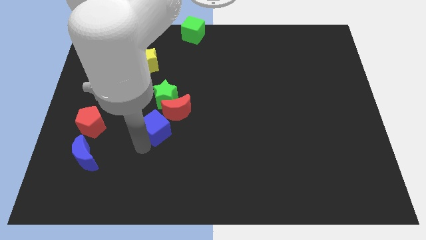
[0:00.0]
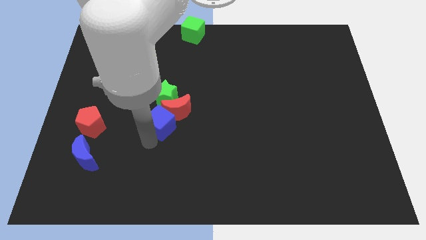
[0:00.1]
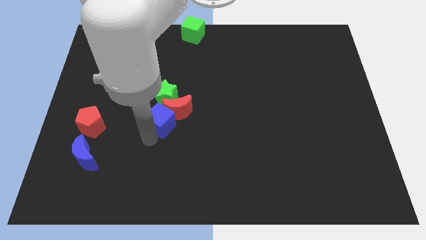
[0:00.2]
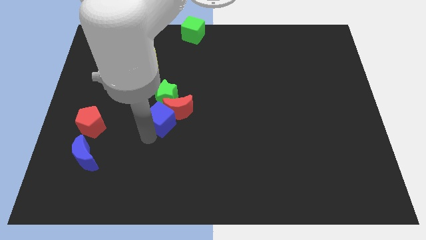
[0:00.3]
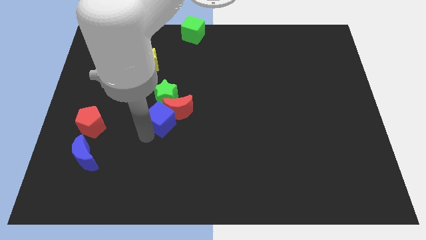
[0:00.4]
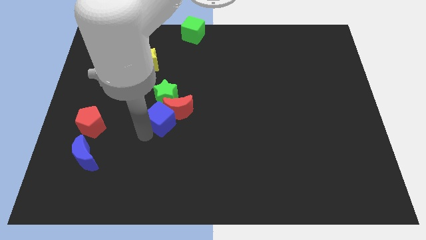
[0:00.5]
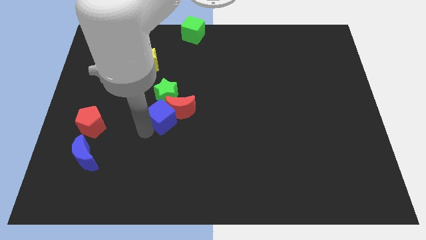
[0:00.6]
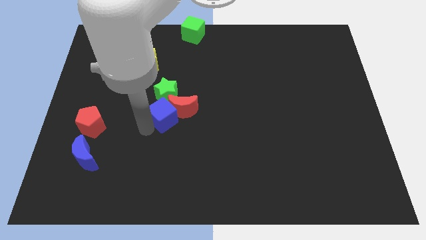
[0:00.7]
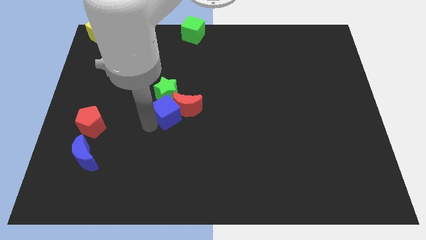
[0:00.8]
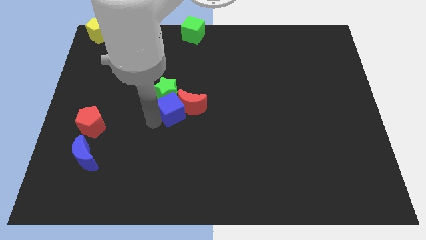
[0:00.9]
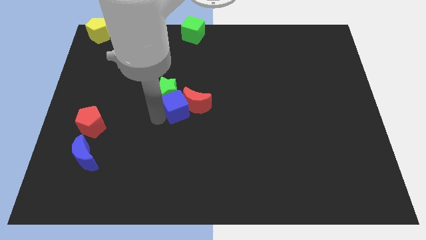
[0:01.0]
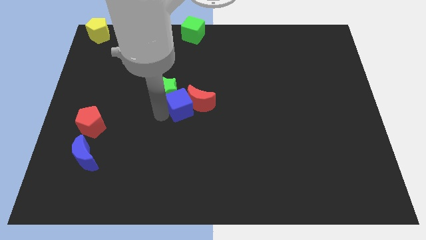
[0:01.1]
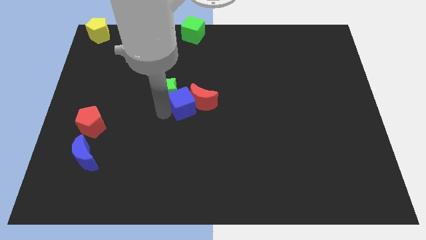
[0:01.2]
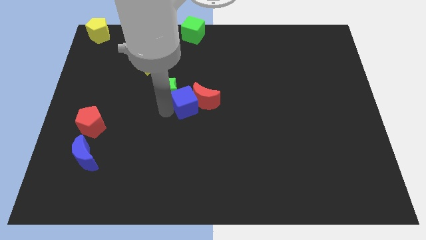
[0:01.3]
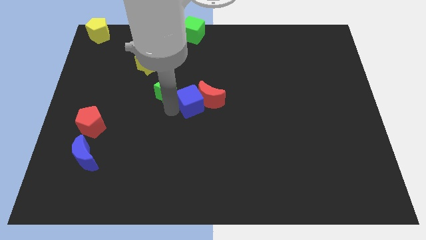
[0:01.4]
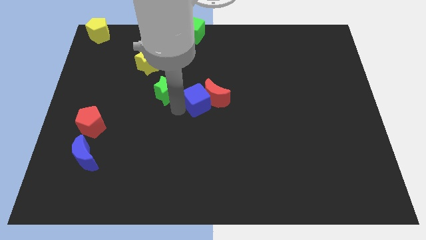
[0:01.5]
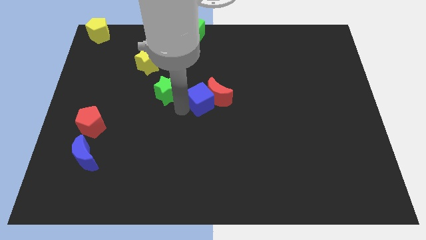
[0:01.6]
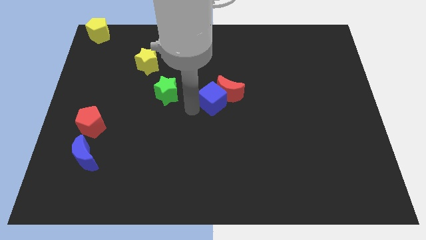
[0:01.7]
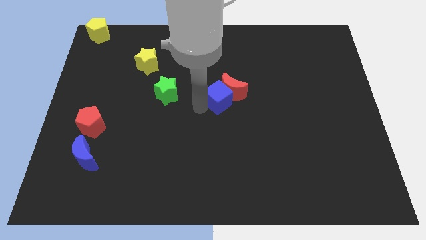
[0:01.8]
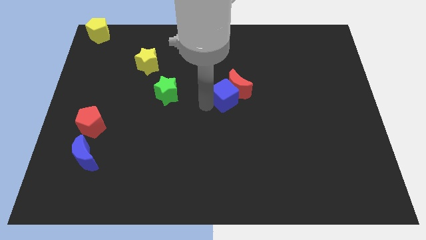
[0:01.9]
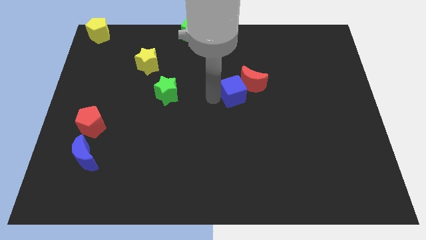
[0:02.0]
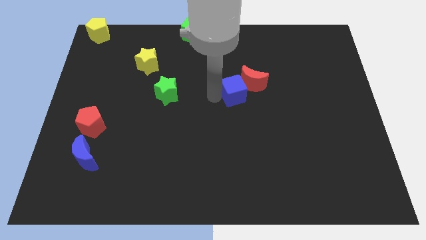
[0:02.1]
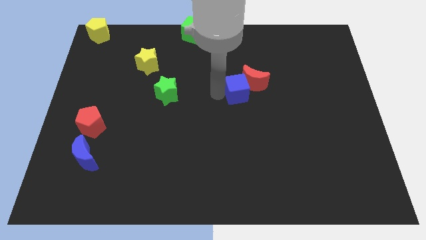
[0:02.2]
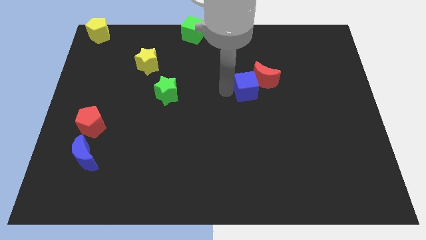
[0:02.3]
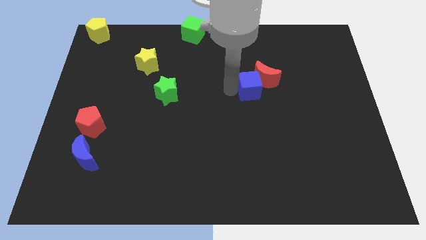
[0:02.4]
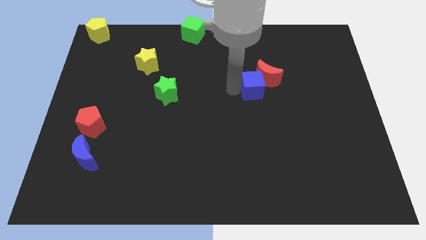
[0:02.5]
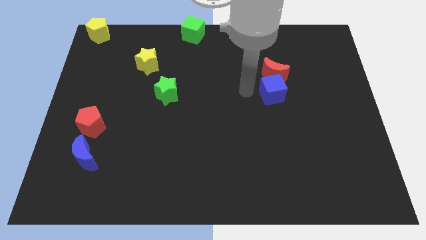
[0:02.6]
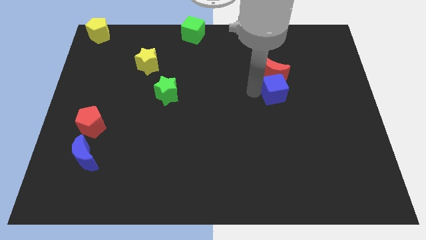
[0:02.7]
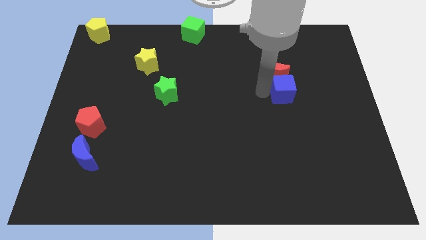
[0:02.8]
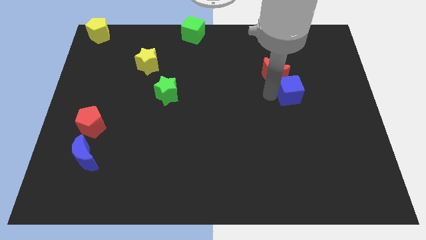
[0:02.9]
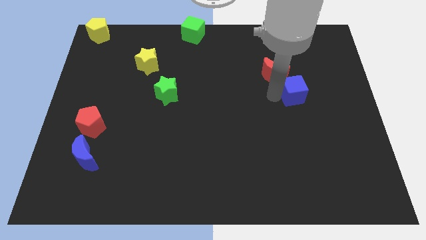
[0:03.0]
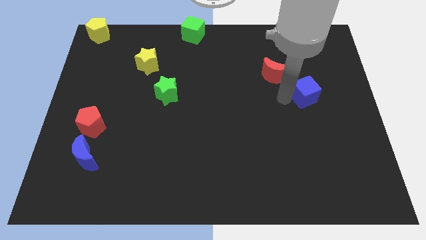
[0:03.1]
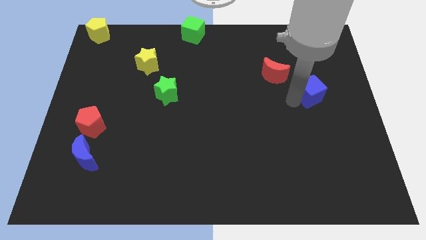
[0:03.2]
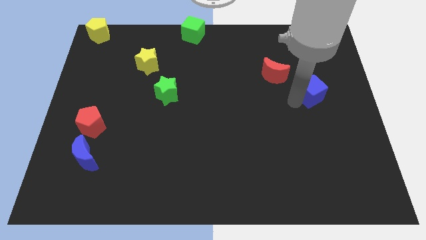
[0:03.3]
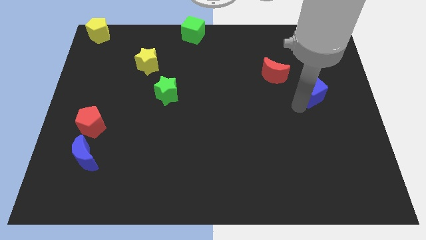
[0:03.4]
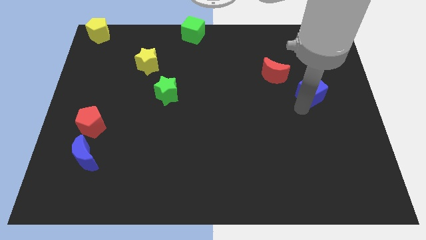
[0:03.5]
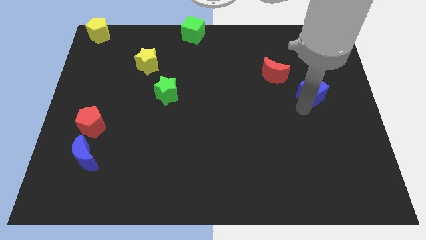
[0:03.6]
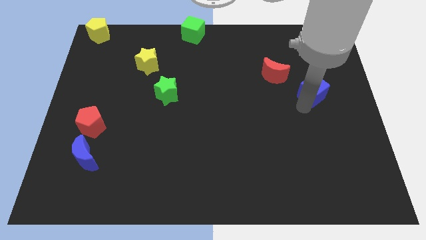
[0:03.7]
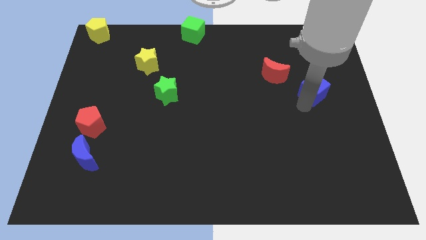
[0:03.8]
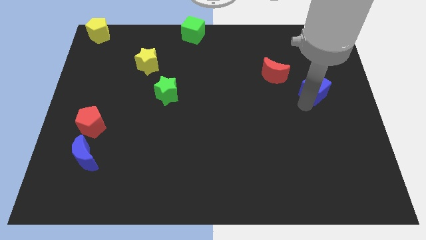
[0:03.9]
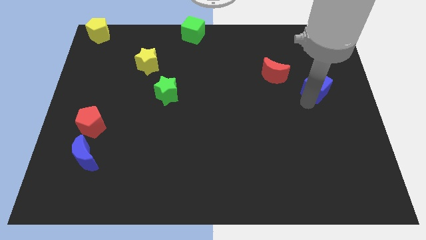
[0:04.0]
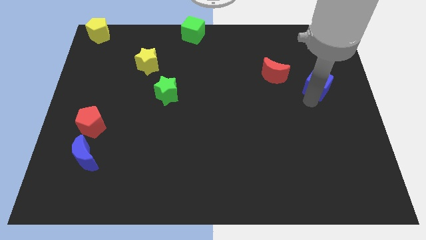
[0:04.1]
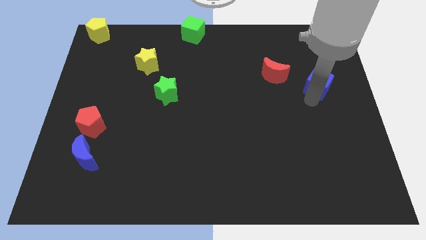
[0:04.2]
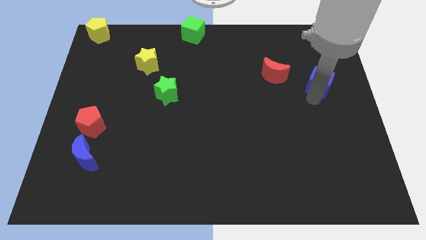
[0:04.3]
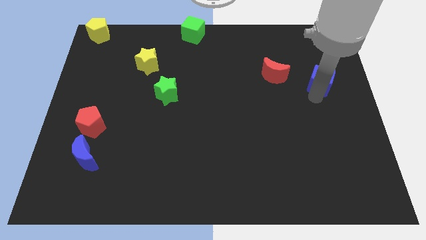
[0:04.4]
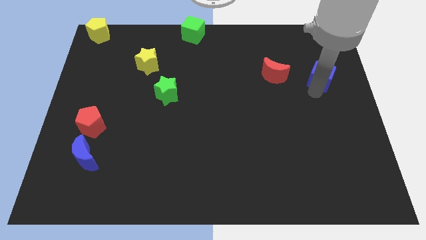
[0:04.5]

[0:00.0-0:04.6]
drag the blue cube slightly to the right

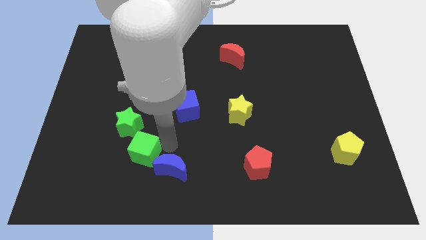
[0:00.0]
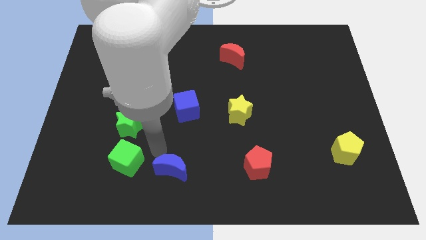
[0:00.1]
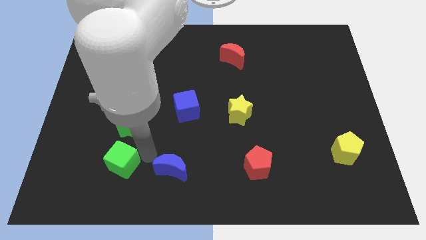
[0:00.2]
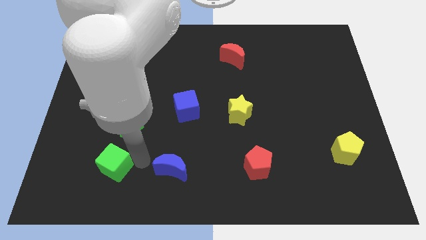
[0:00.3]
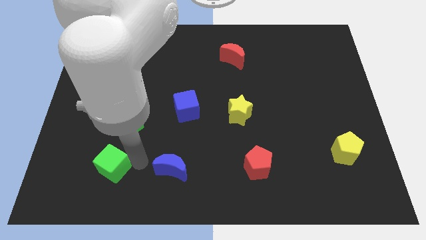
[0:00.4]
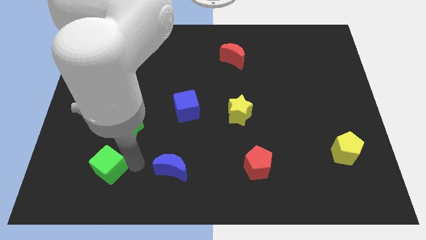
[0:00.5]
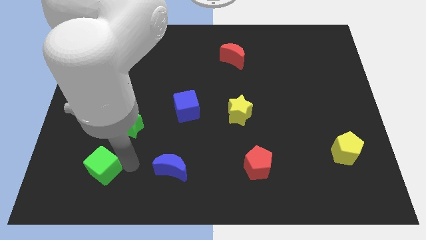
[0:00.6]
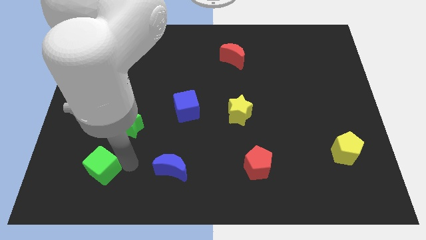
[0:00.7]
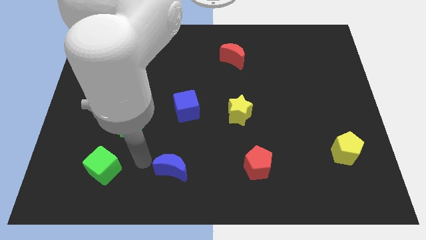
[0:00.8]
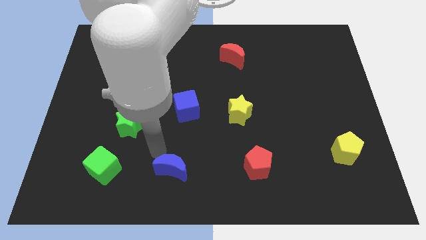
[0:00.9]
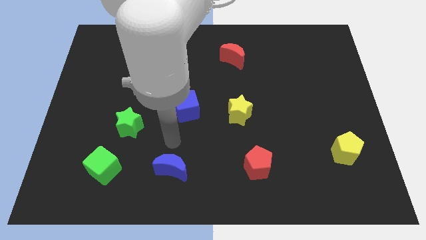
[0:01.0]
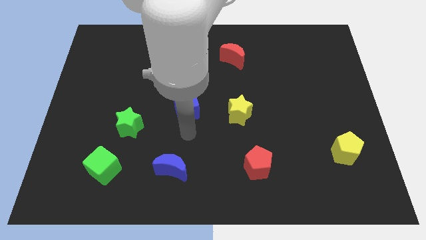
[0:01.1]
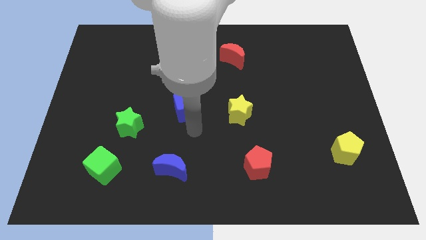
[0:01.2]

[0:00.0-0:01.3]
slide the green cube horizontally to the left side of the blue moon

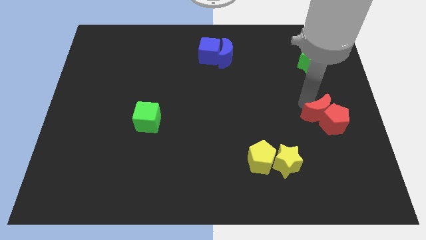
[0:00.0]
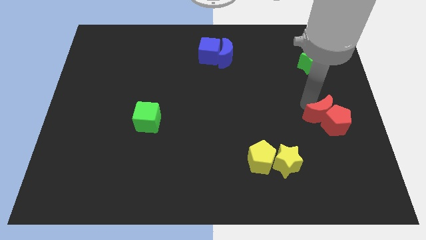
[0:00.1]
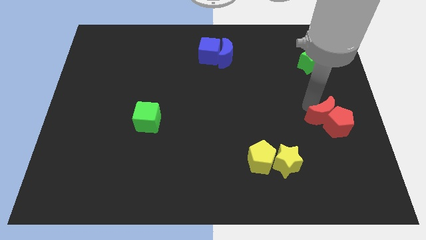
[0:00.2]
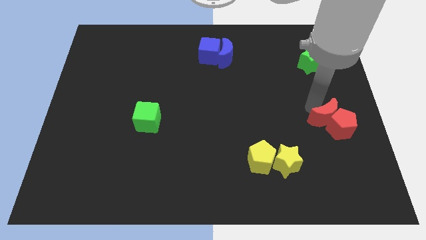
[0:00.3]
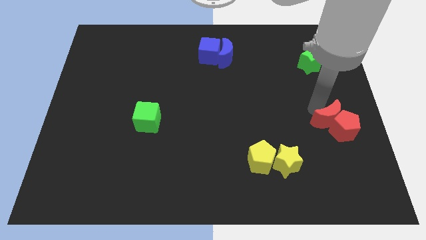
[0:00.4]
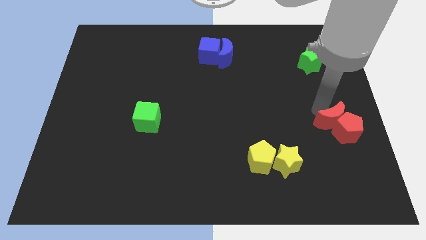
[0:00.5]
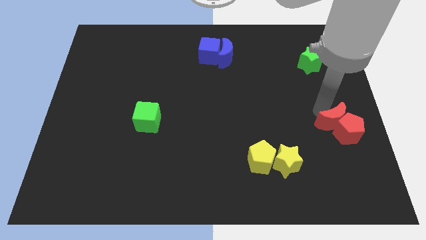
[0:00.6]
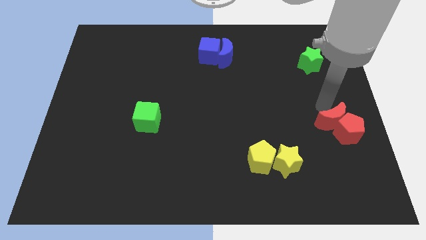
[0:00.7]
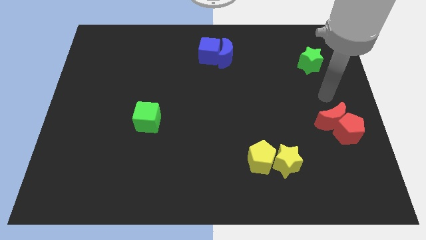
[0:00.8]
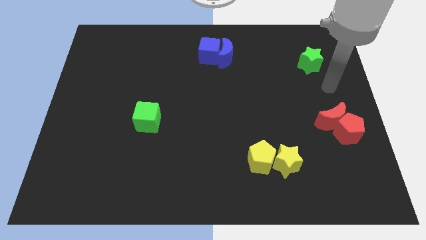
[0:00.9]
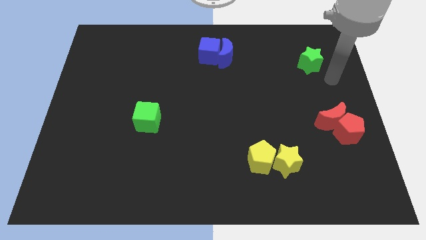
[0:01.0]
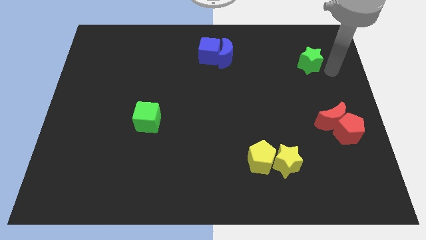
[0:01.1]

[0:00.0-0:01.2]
slightly adjust the red pentagon and red crescent towards the bottom left

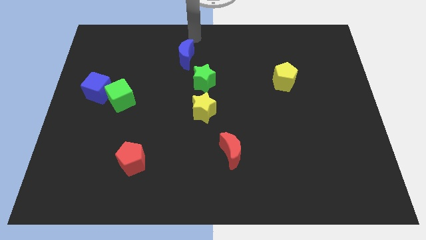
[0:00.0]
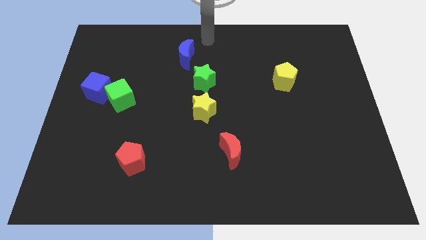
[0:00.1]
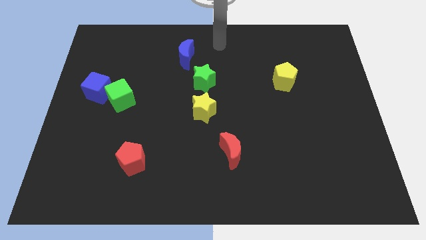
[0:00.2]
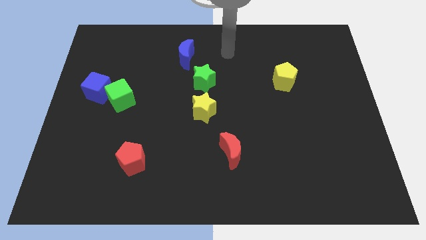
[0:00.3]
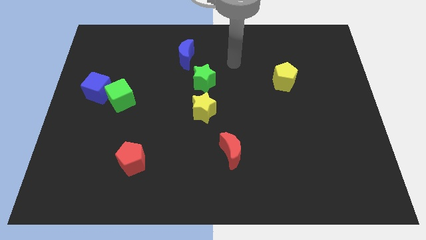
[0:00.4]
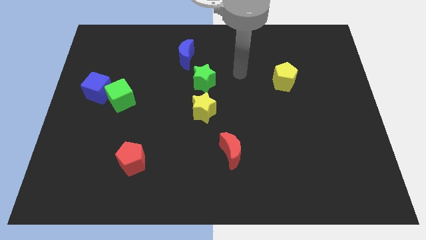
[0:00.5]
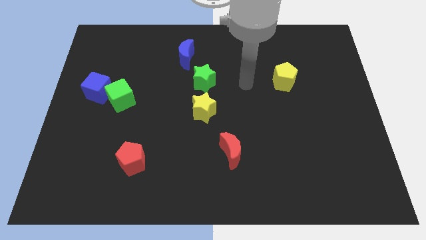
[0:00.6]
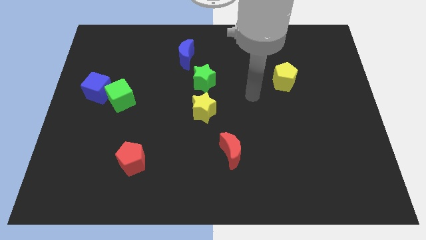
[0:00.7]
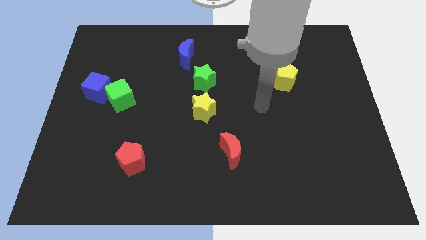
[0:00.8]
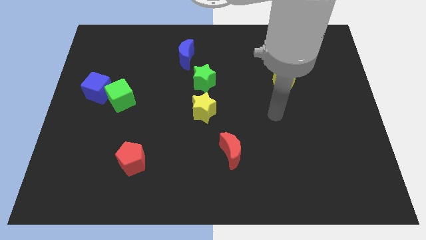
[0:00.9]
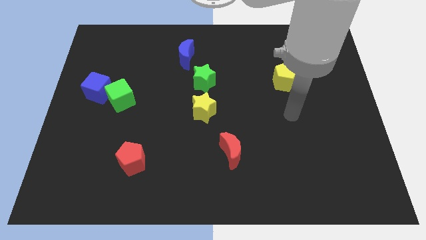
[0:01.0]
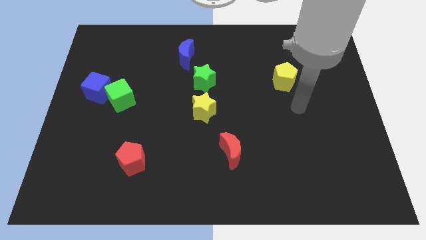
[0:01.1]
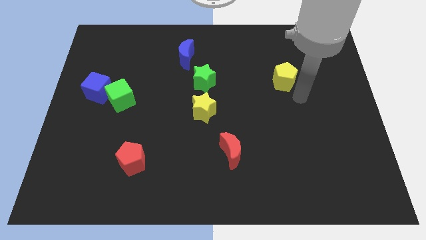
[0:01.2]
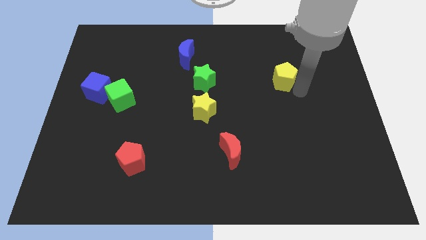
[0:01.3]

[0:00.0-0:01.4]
move your arm to the right of yellow pentagon

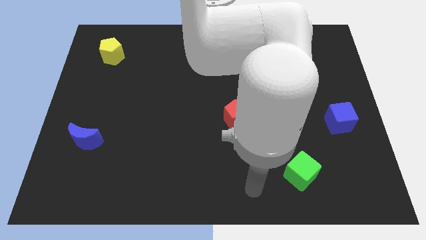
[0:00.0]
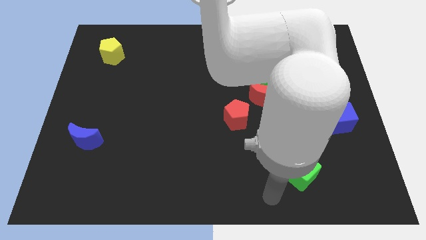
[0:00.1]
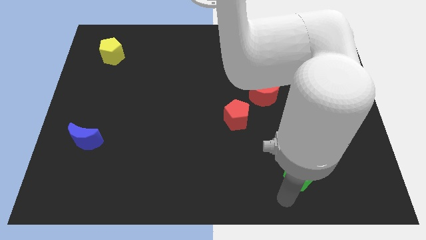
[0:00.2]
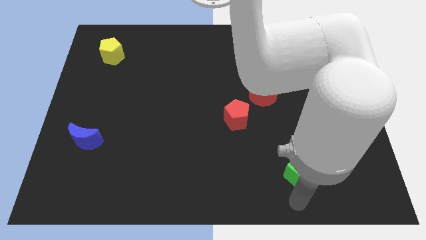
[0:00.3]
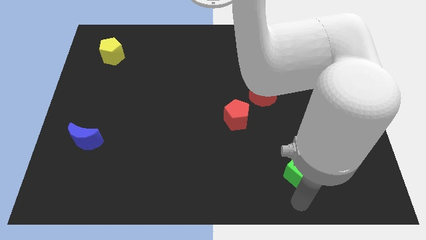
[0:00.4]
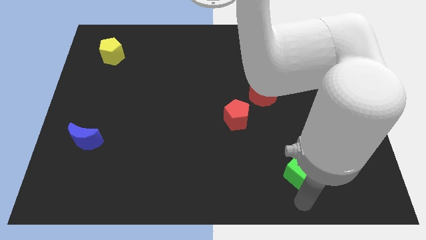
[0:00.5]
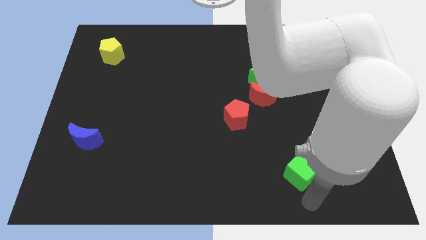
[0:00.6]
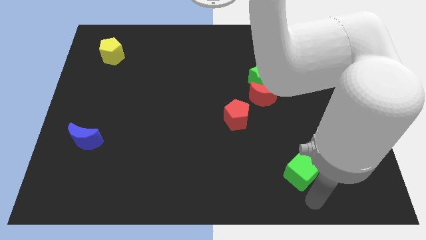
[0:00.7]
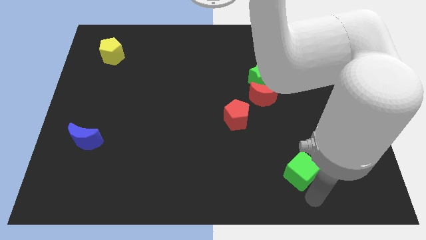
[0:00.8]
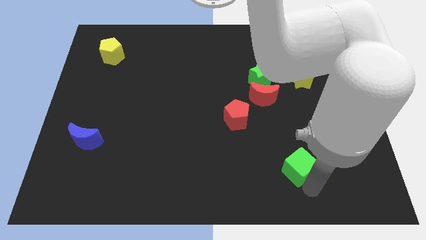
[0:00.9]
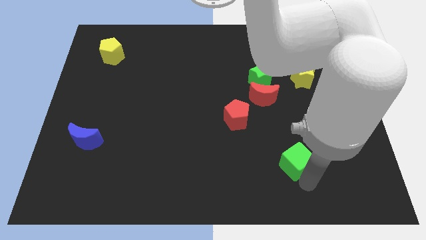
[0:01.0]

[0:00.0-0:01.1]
touch the bottom of green cube
